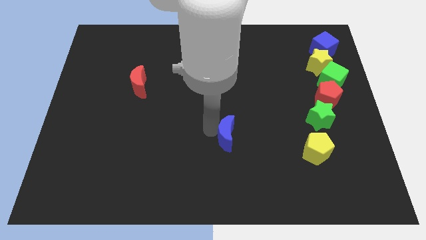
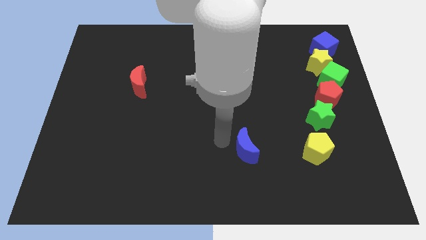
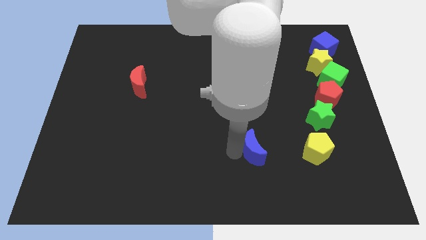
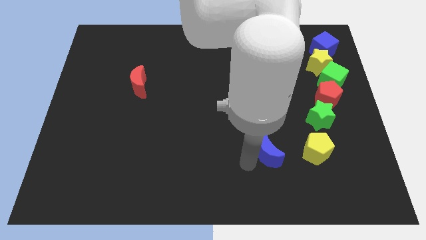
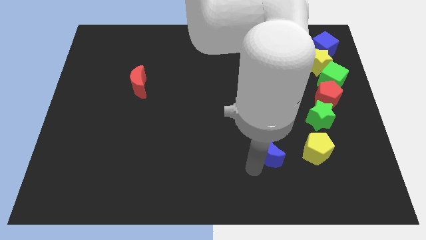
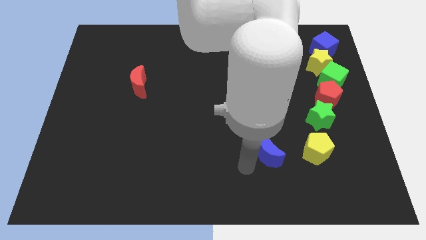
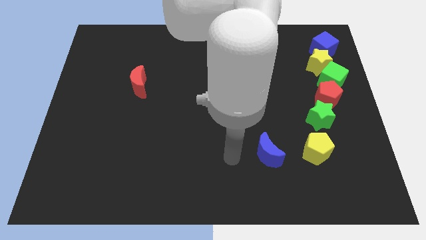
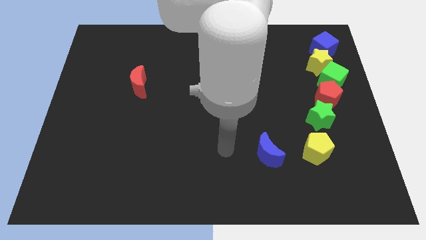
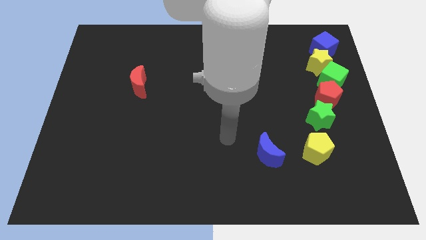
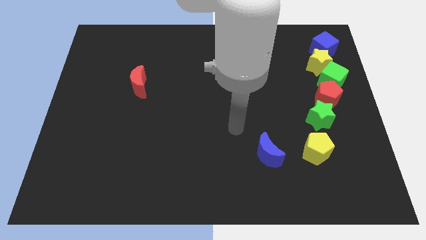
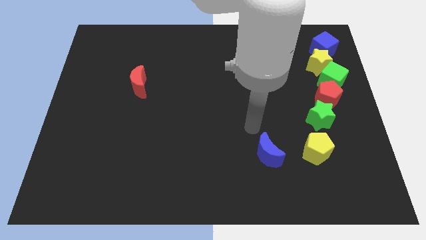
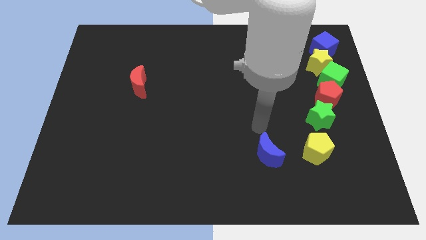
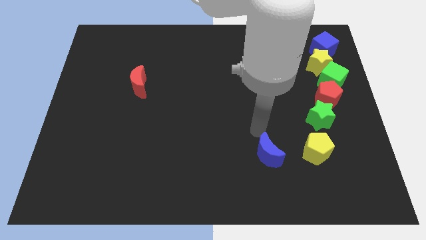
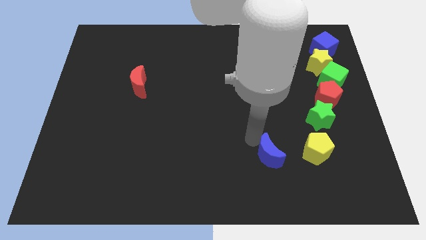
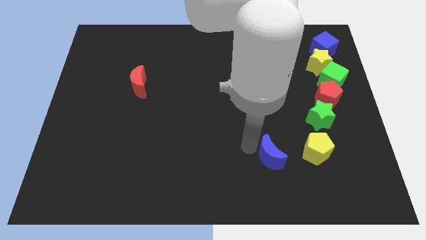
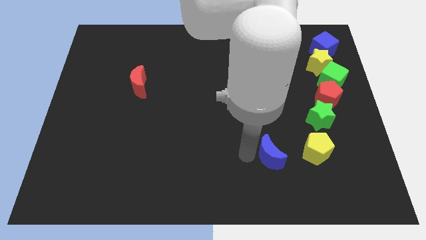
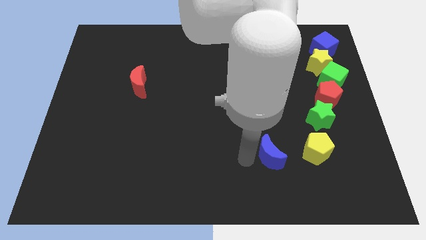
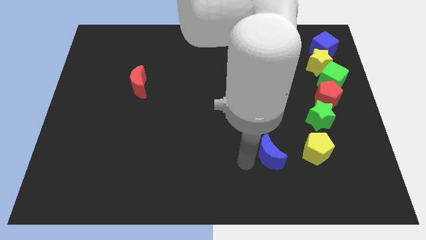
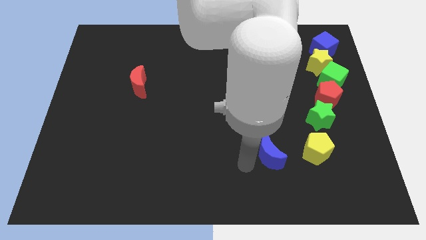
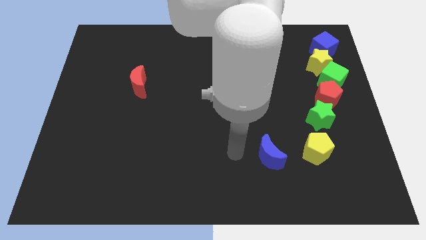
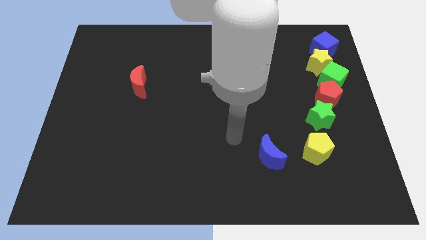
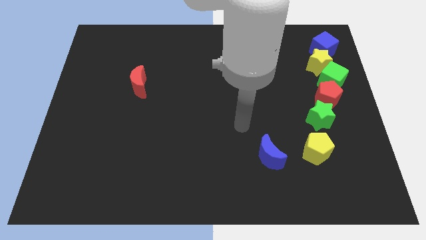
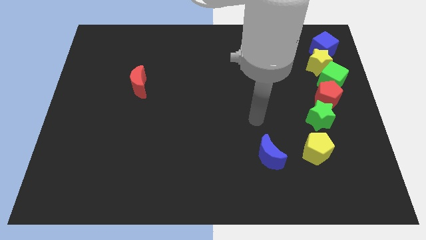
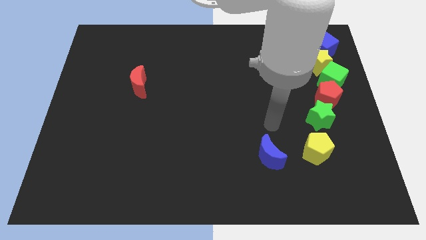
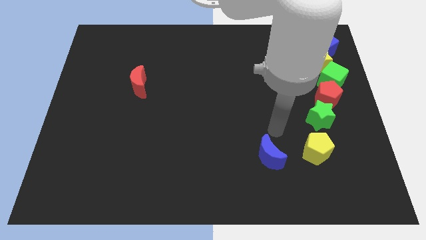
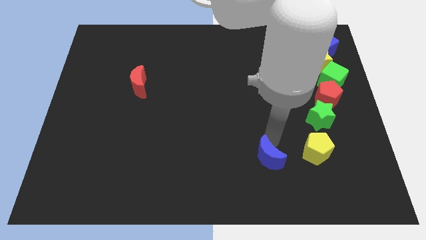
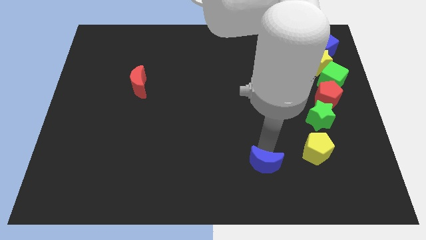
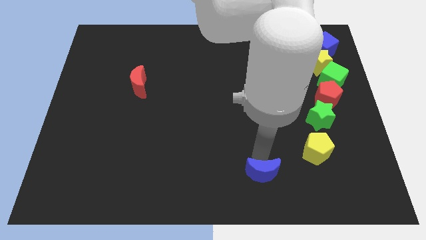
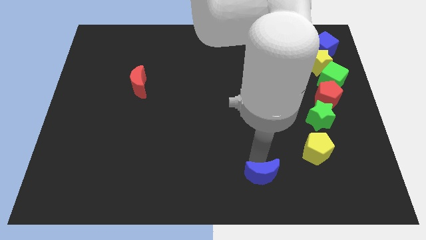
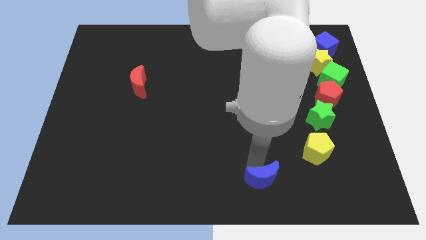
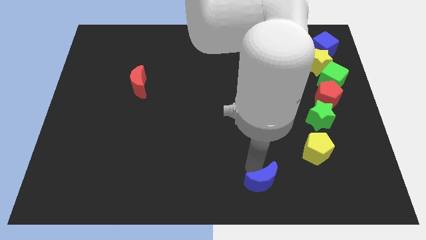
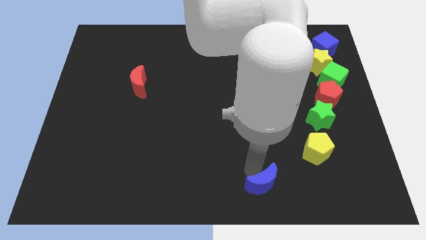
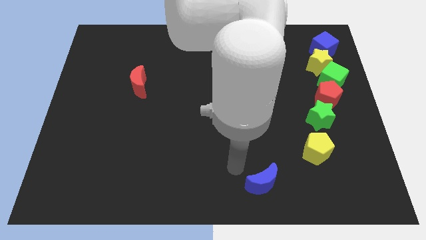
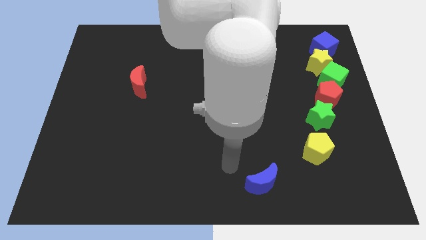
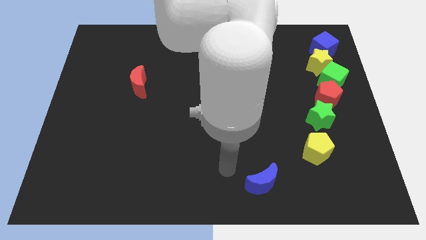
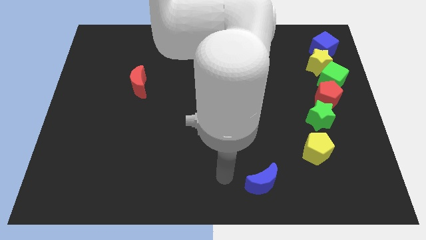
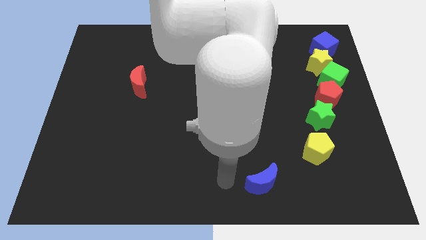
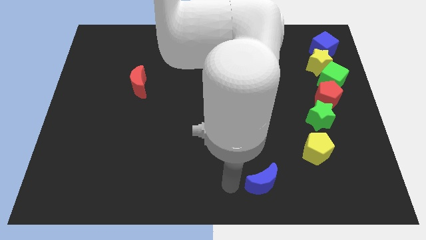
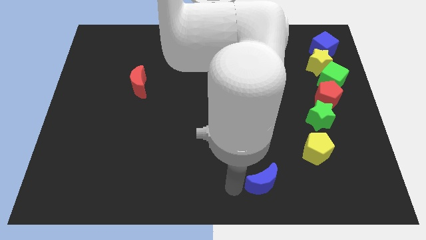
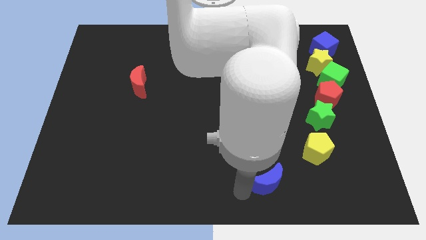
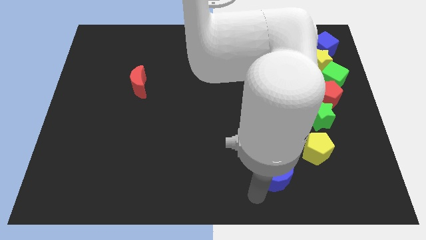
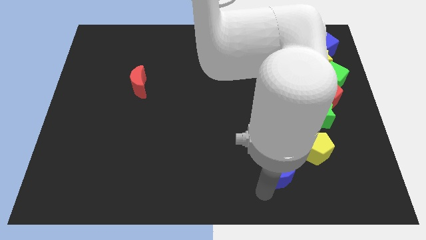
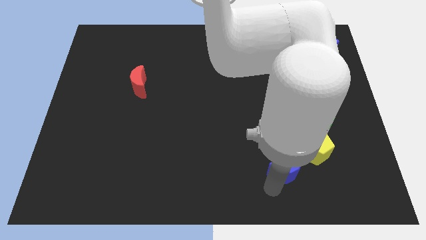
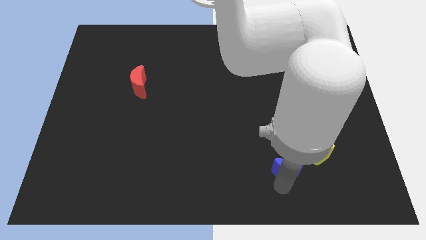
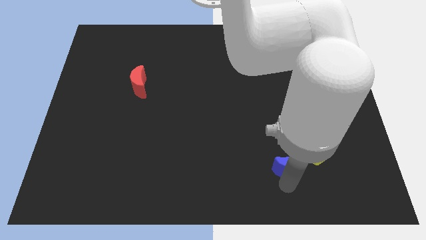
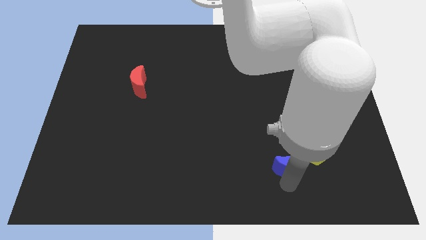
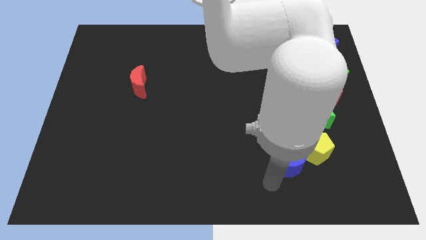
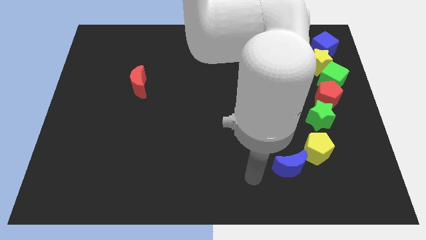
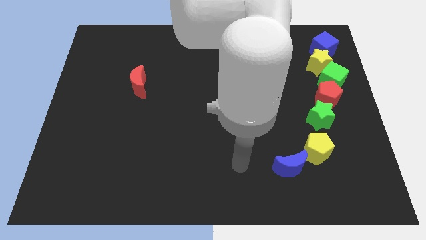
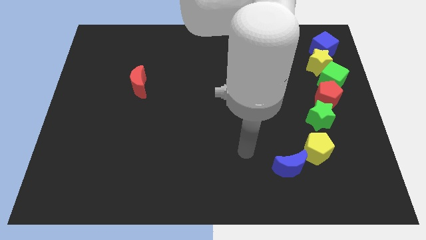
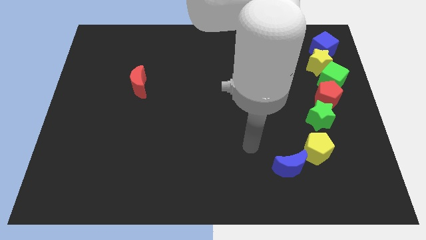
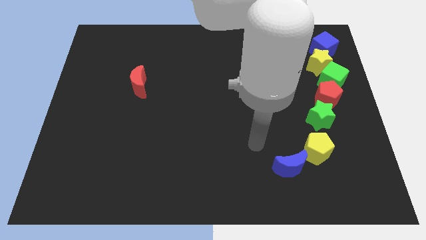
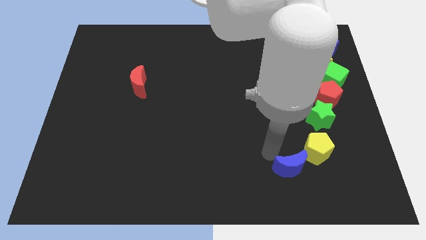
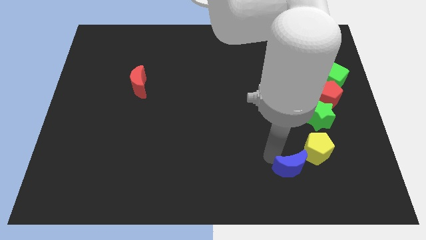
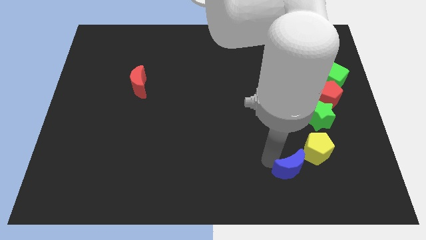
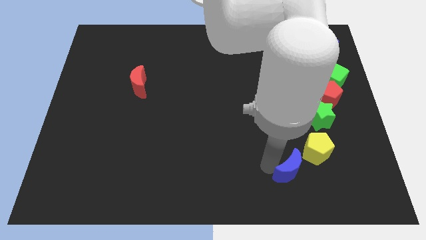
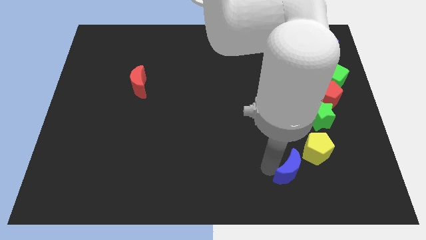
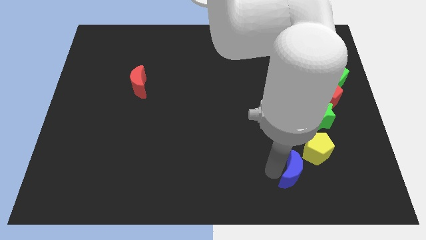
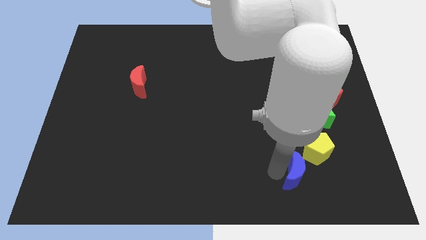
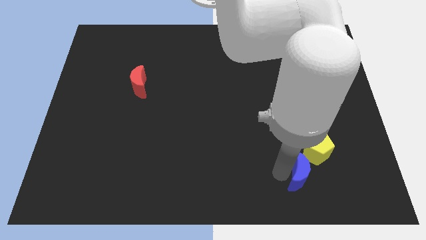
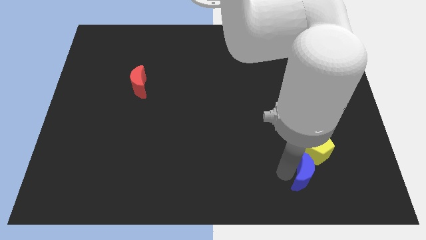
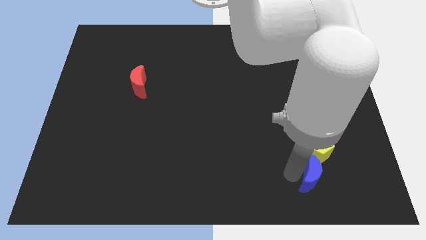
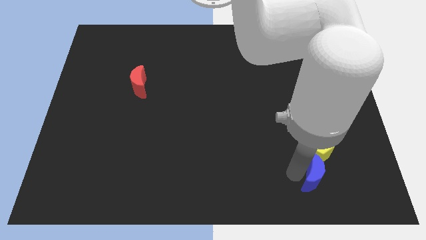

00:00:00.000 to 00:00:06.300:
place the blue moon below the yellow pentagon to form a line

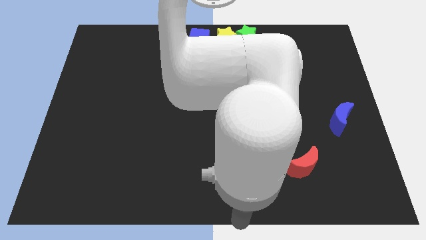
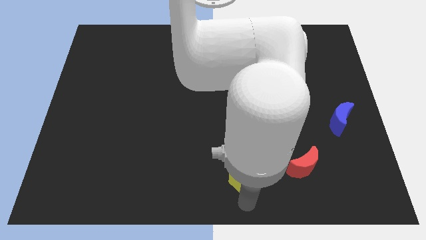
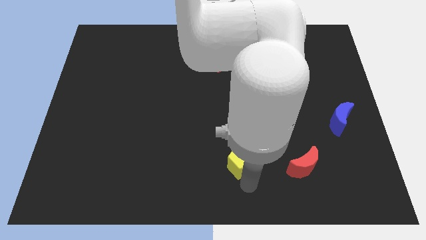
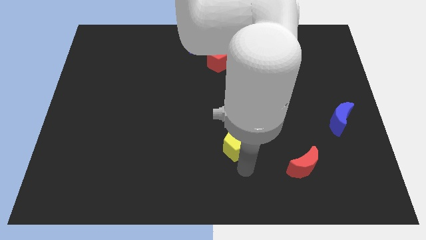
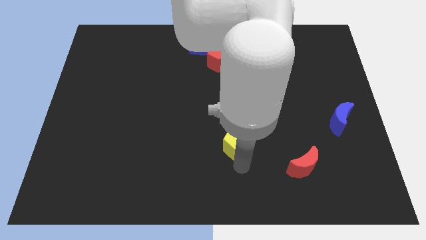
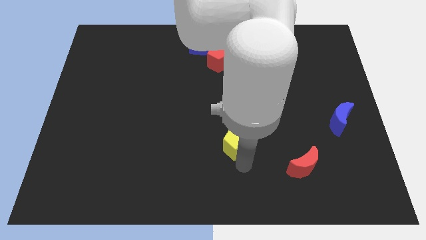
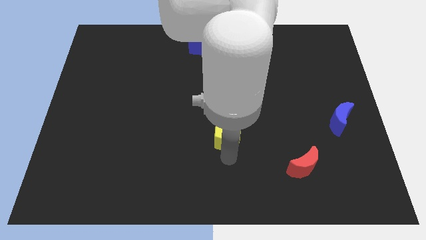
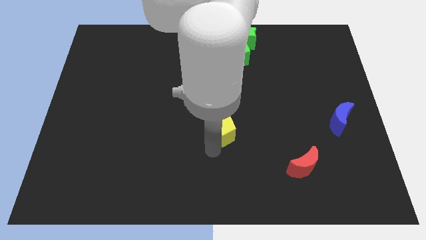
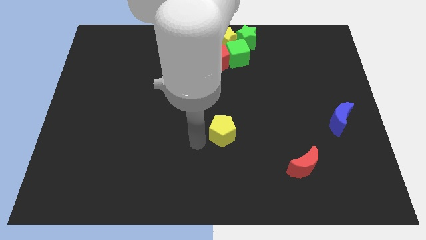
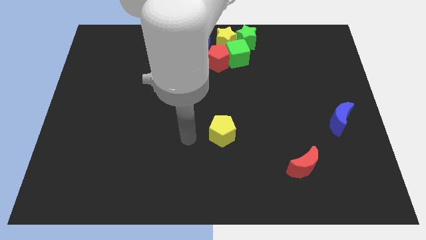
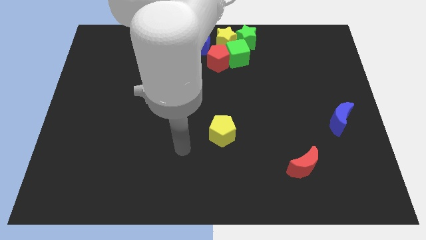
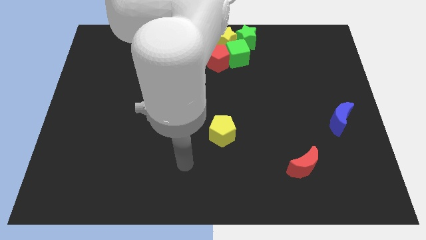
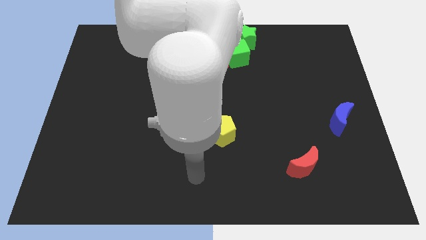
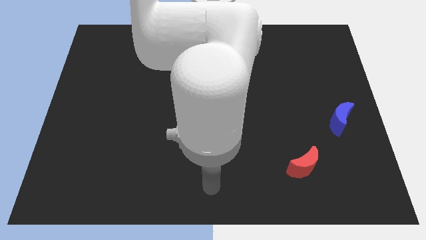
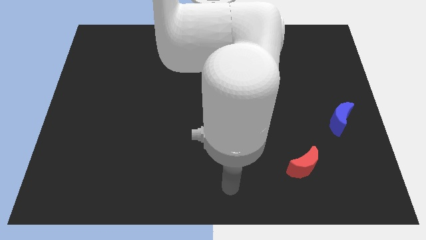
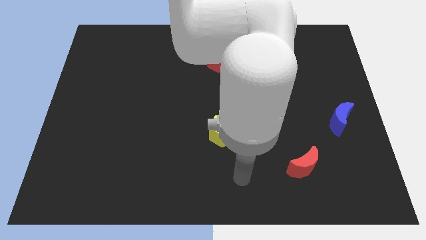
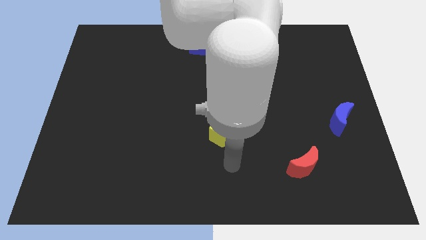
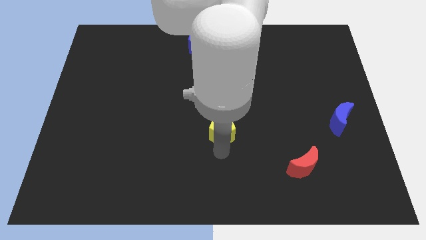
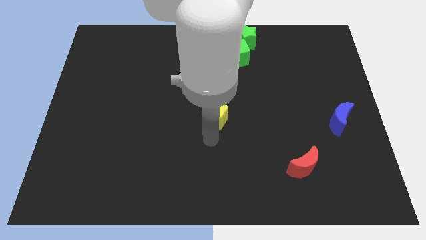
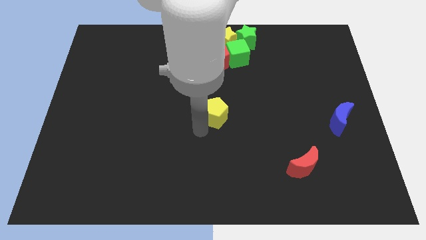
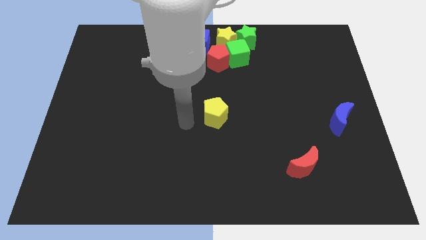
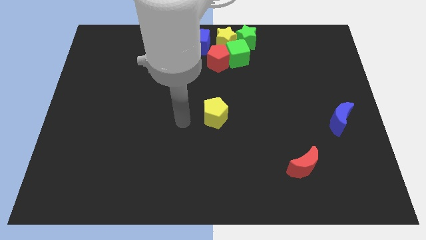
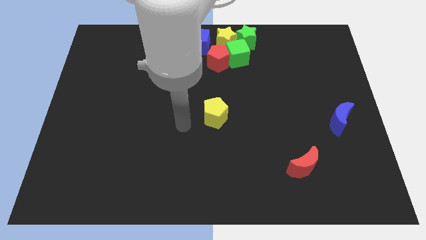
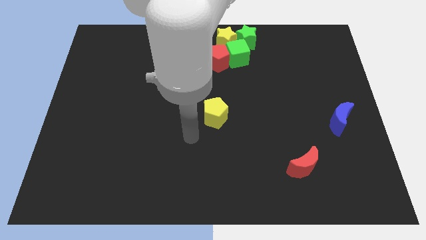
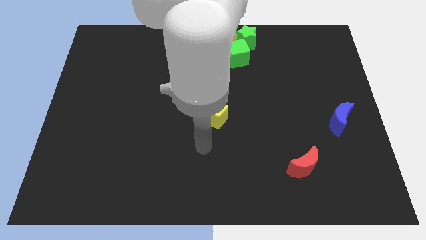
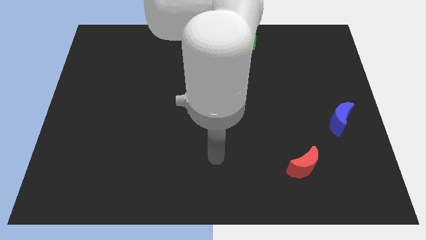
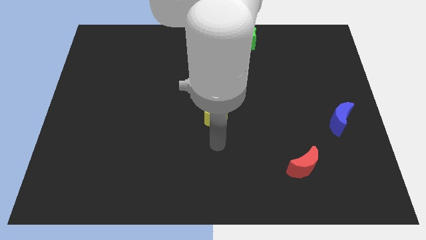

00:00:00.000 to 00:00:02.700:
push the yellow pentagon to the center of the board
